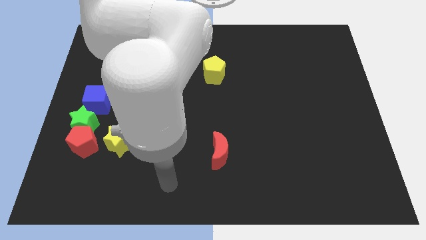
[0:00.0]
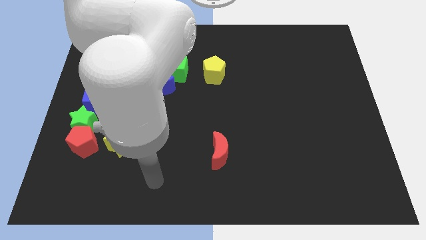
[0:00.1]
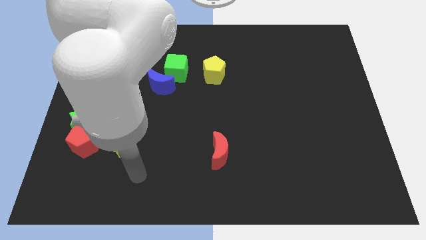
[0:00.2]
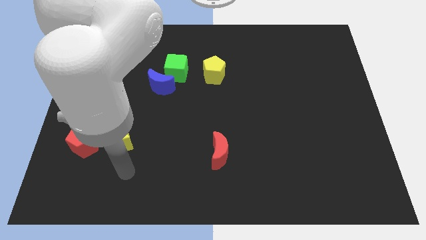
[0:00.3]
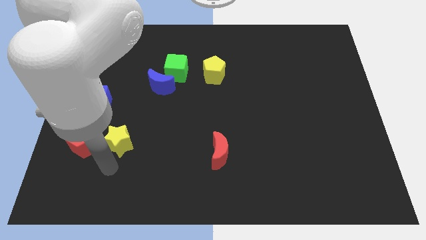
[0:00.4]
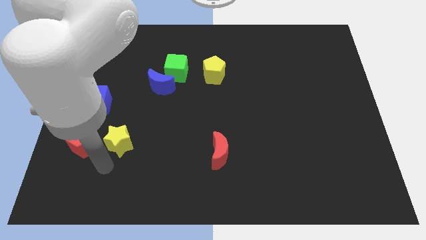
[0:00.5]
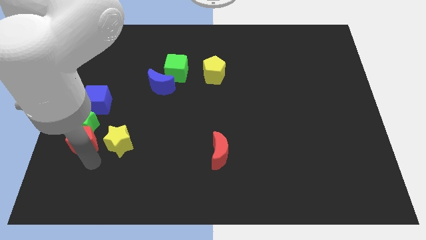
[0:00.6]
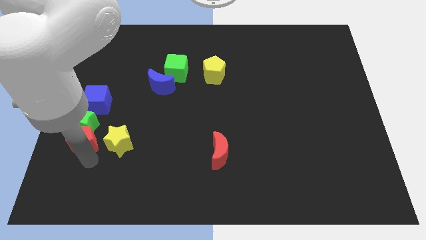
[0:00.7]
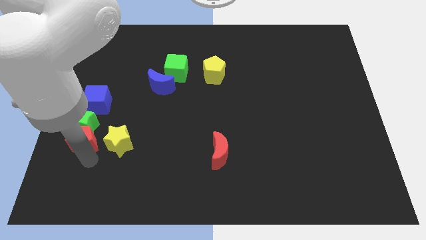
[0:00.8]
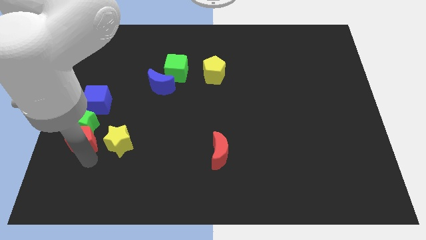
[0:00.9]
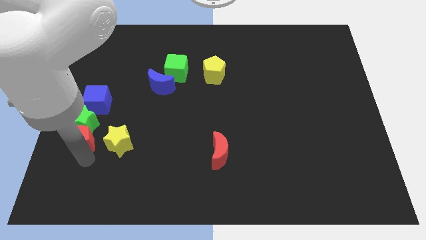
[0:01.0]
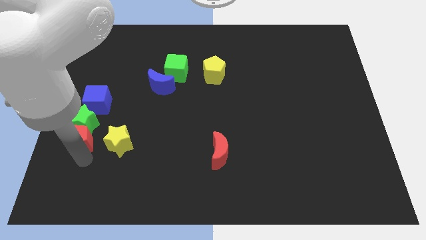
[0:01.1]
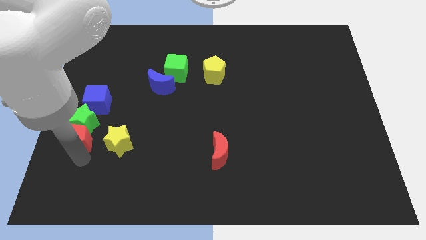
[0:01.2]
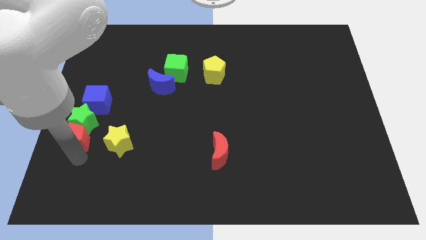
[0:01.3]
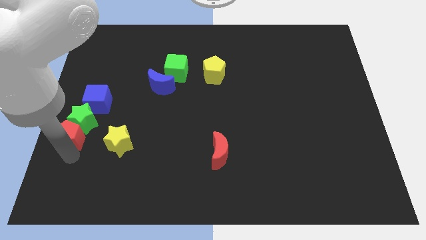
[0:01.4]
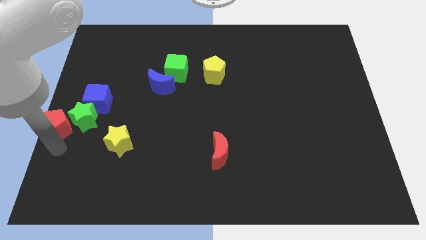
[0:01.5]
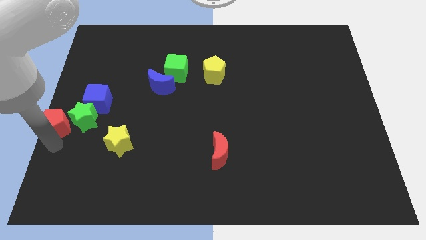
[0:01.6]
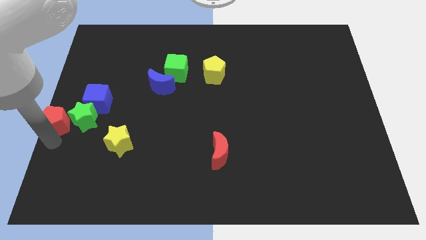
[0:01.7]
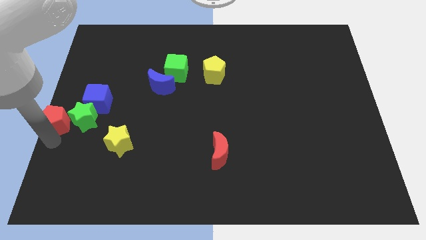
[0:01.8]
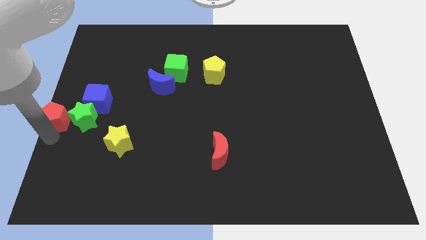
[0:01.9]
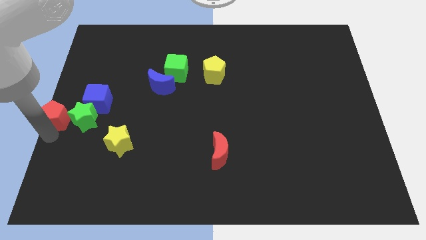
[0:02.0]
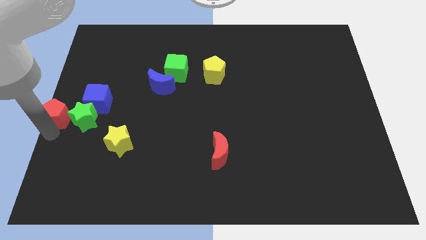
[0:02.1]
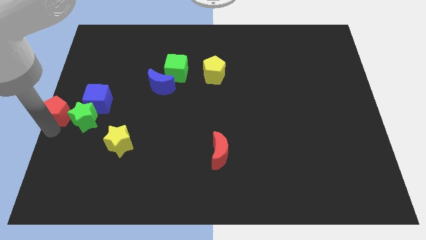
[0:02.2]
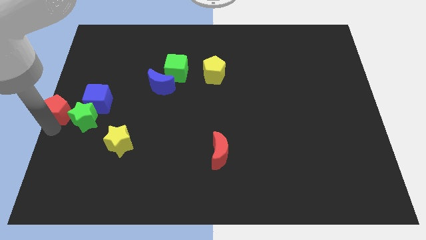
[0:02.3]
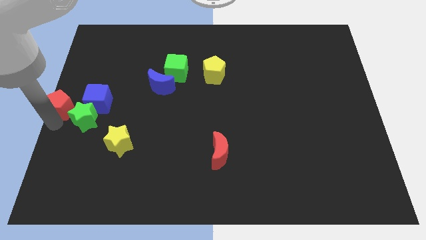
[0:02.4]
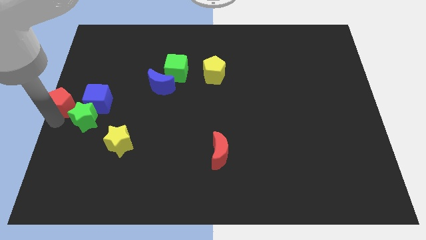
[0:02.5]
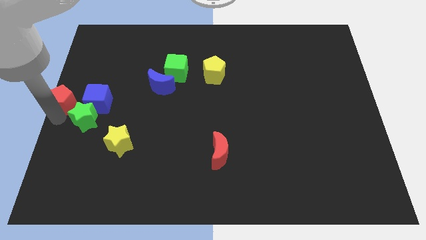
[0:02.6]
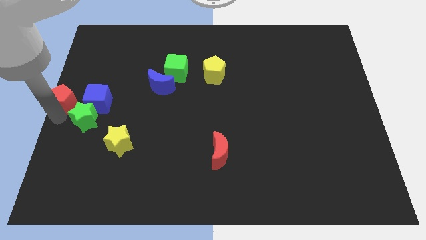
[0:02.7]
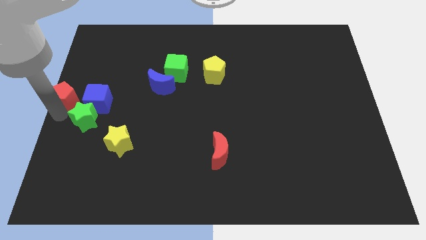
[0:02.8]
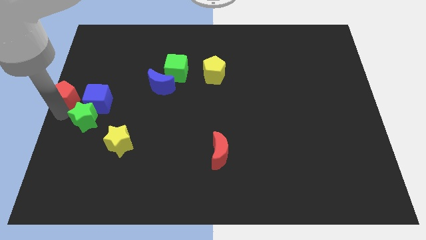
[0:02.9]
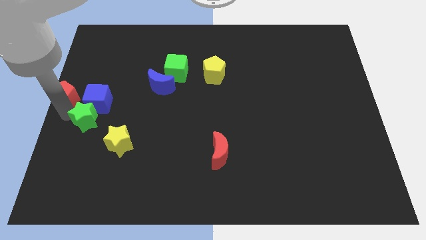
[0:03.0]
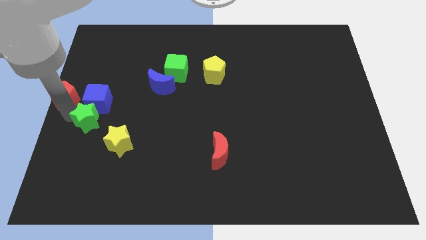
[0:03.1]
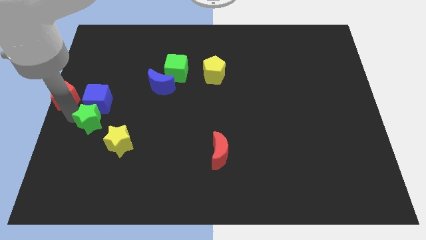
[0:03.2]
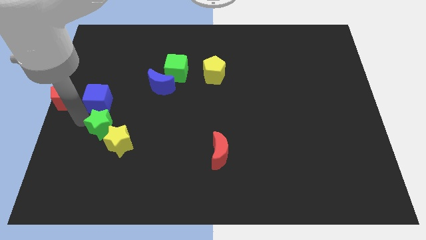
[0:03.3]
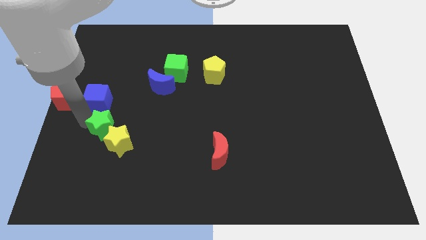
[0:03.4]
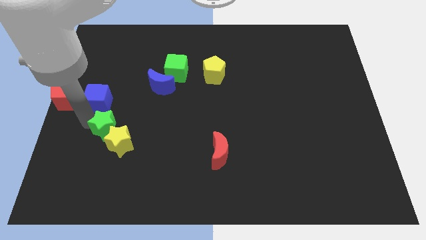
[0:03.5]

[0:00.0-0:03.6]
push the green star next to the yellow star

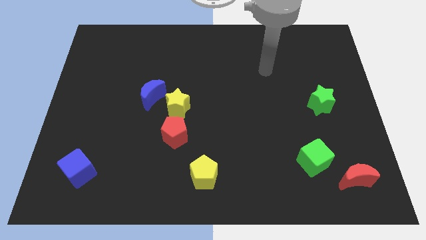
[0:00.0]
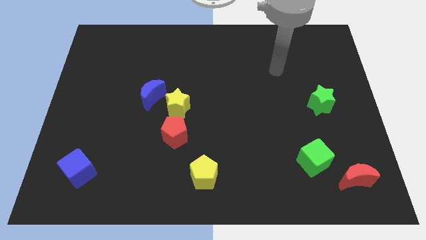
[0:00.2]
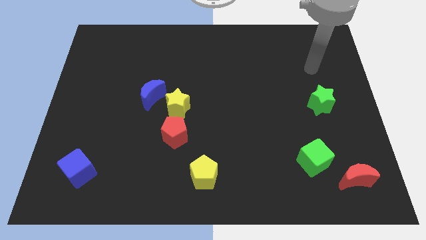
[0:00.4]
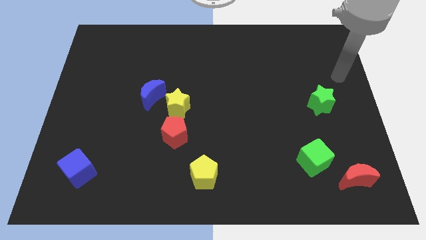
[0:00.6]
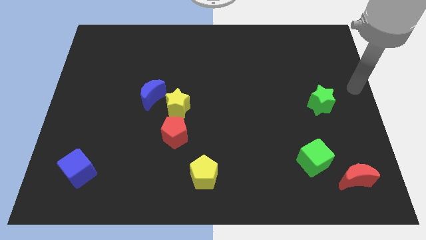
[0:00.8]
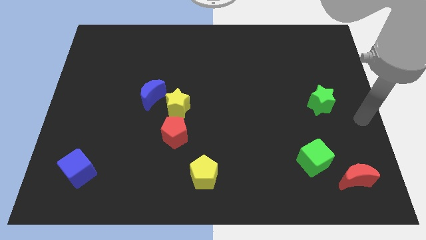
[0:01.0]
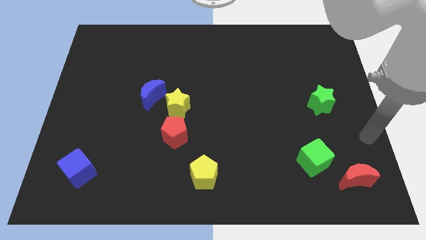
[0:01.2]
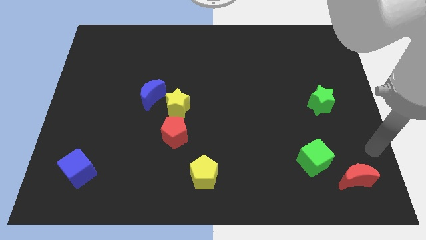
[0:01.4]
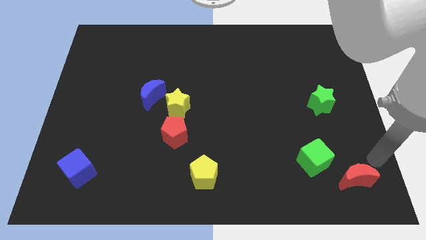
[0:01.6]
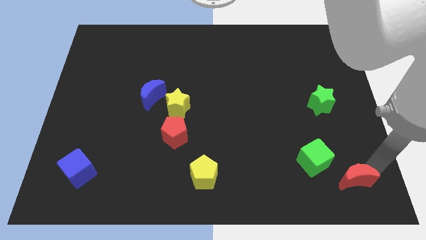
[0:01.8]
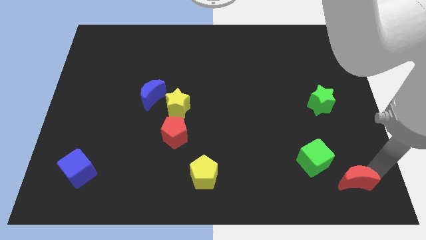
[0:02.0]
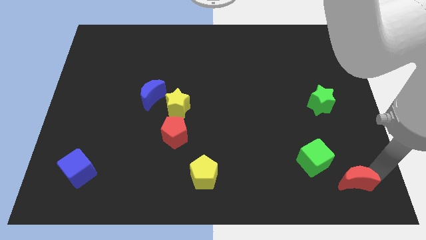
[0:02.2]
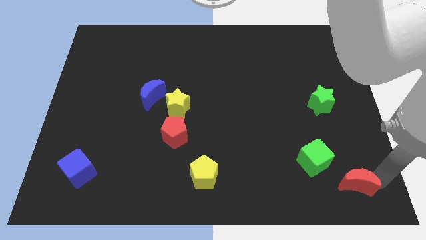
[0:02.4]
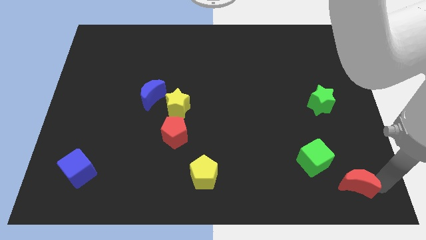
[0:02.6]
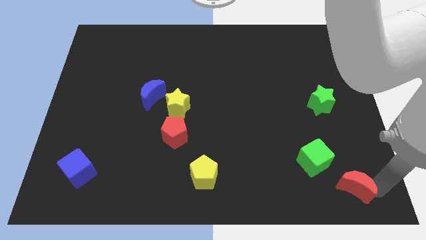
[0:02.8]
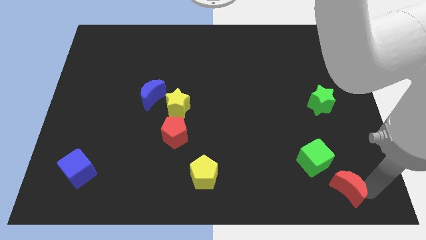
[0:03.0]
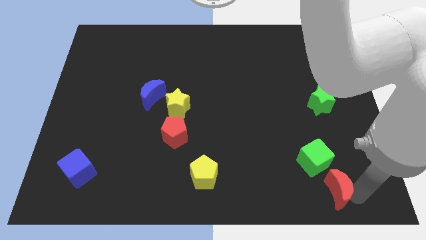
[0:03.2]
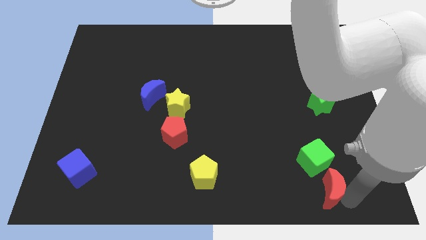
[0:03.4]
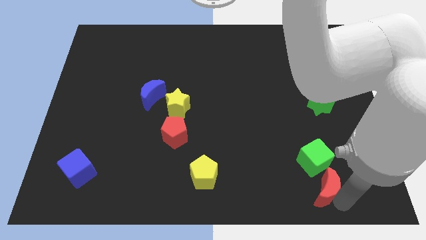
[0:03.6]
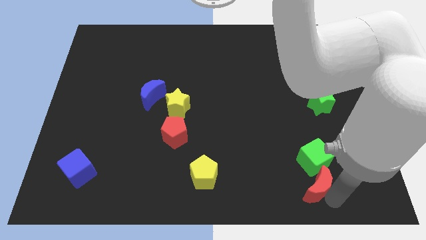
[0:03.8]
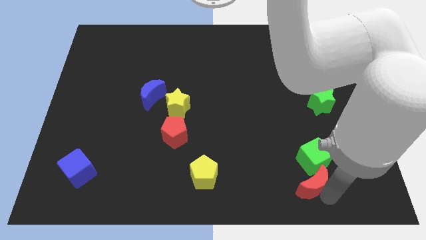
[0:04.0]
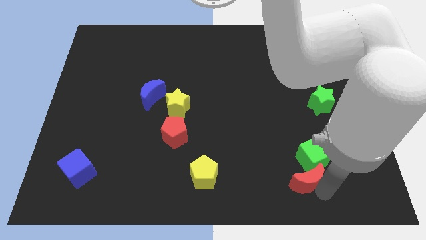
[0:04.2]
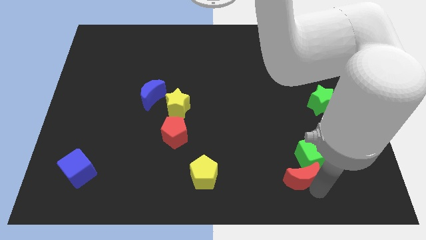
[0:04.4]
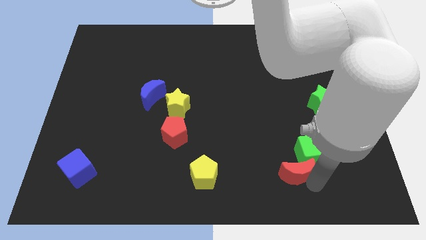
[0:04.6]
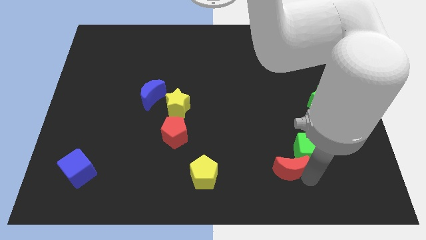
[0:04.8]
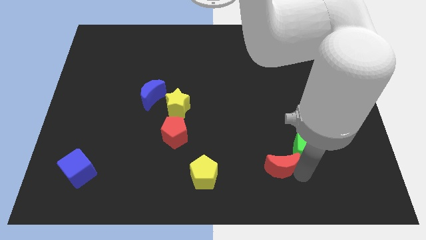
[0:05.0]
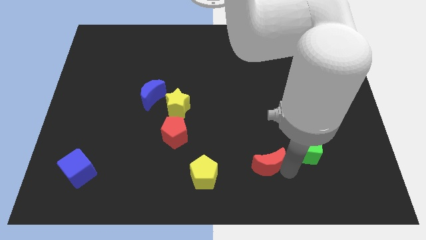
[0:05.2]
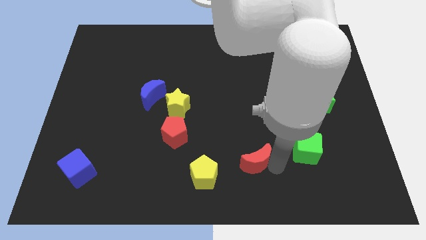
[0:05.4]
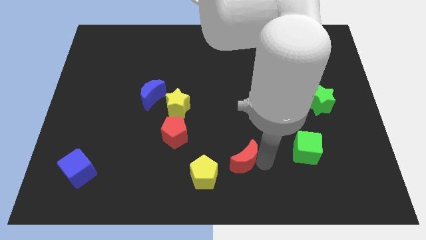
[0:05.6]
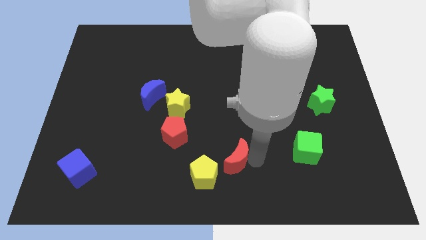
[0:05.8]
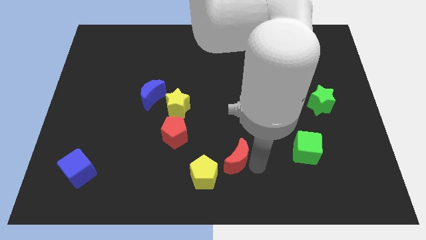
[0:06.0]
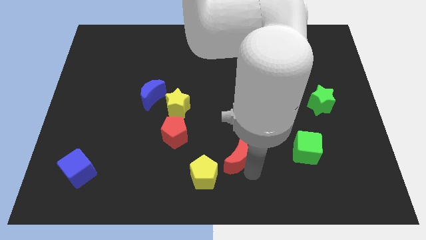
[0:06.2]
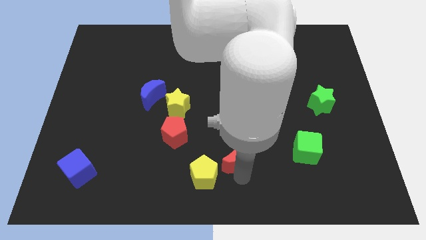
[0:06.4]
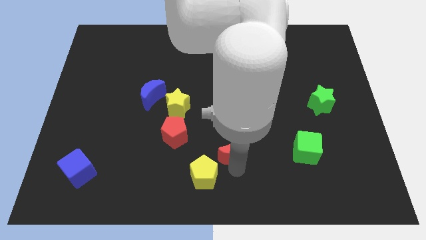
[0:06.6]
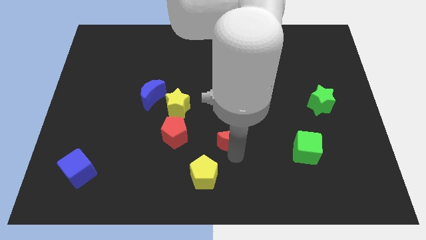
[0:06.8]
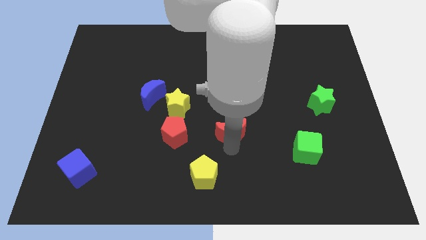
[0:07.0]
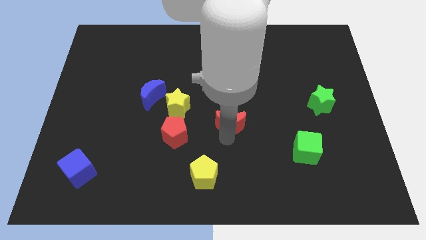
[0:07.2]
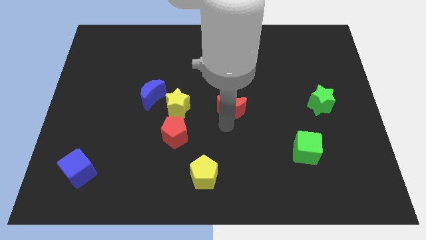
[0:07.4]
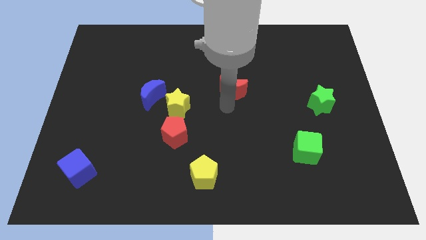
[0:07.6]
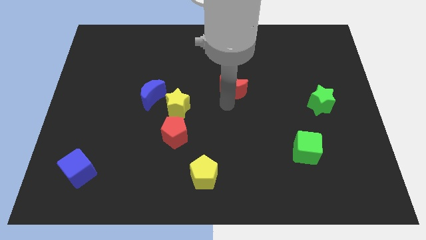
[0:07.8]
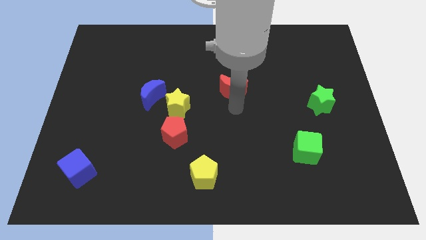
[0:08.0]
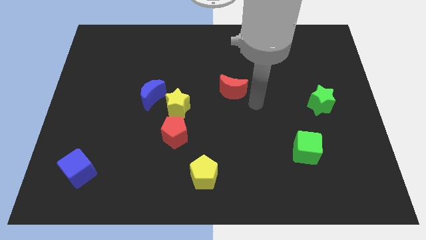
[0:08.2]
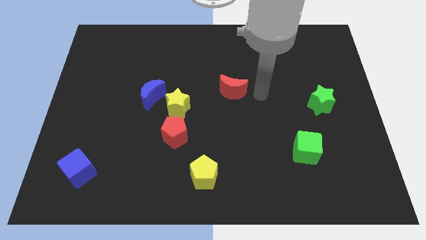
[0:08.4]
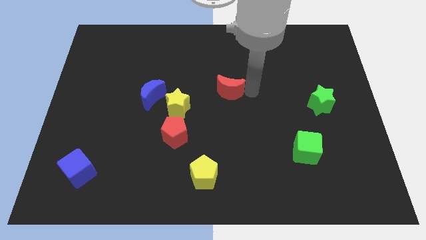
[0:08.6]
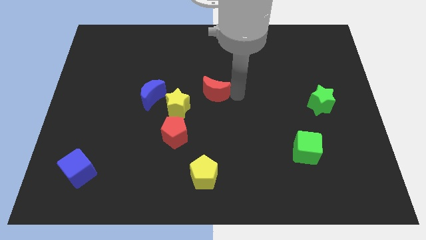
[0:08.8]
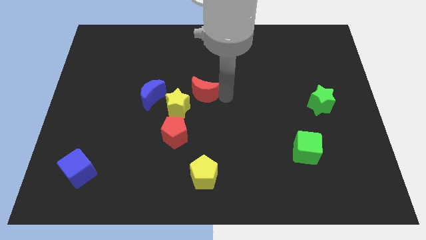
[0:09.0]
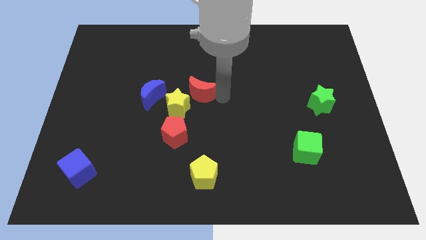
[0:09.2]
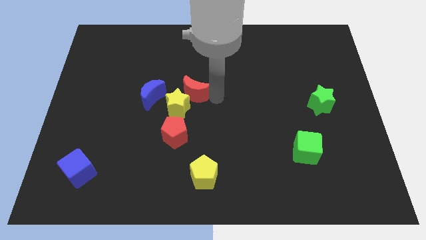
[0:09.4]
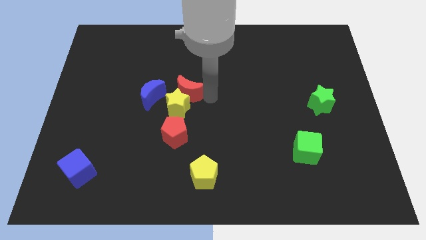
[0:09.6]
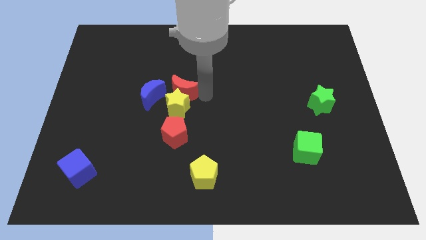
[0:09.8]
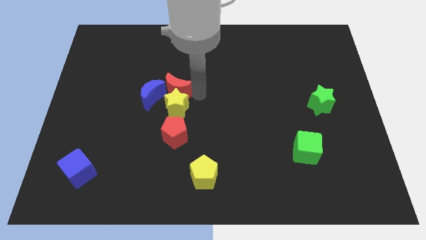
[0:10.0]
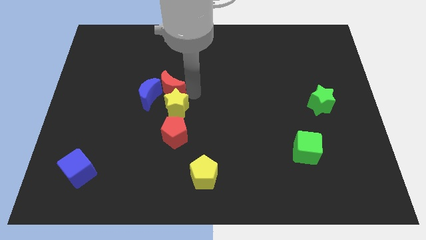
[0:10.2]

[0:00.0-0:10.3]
slide the red moon to the blue moon
